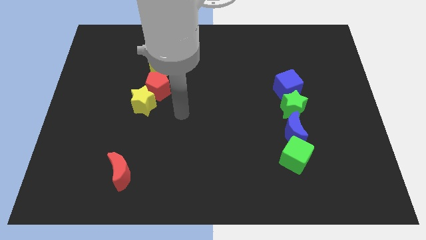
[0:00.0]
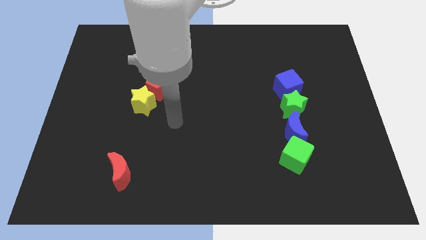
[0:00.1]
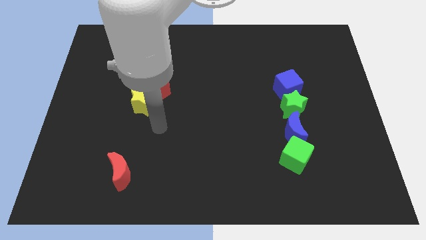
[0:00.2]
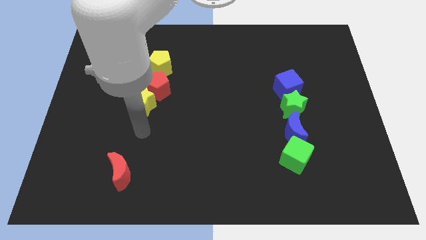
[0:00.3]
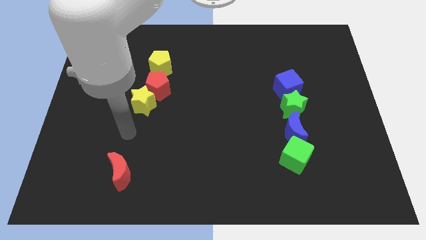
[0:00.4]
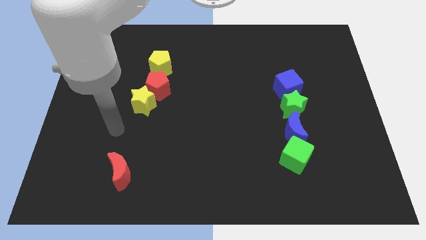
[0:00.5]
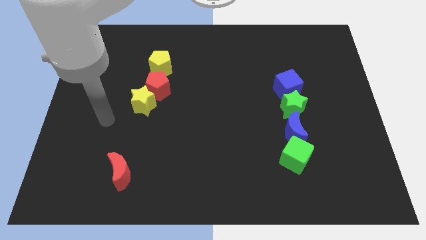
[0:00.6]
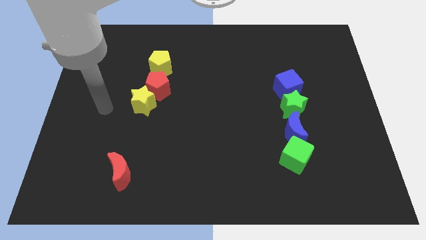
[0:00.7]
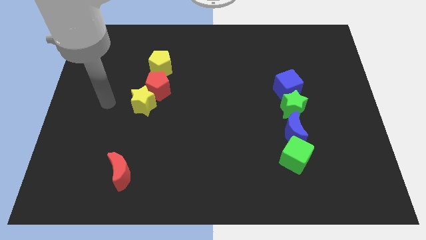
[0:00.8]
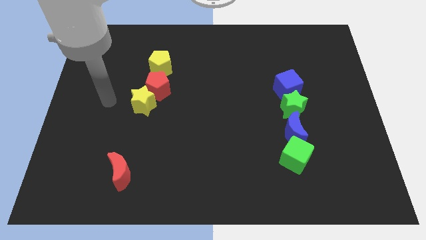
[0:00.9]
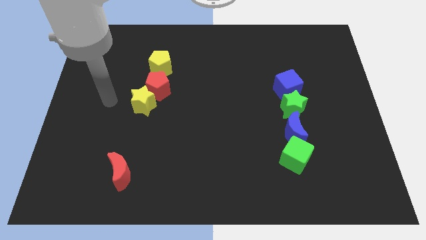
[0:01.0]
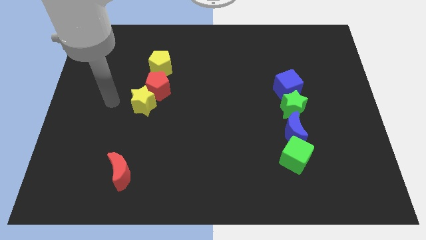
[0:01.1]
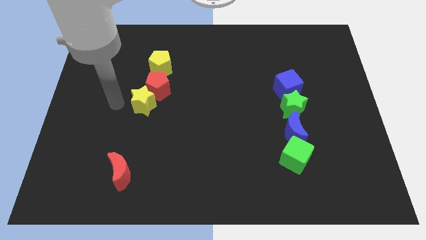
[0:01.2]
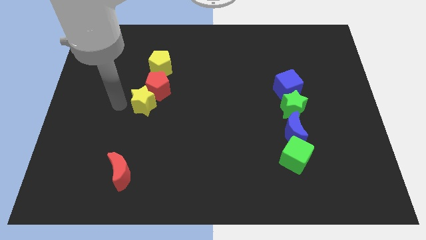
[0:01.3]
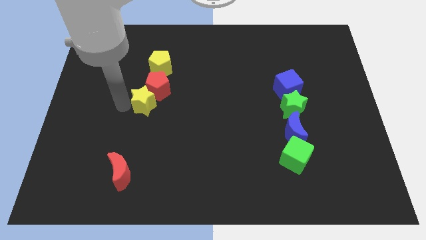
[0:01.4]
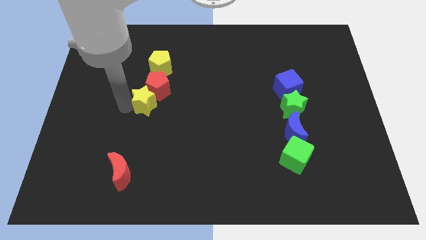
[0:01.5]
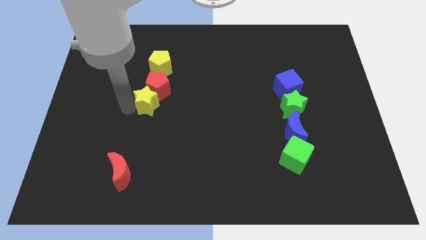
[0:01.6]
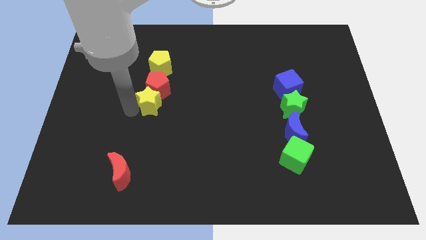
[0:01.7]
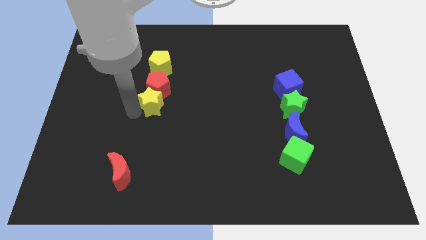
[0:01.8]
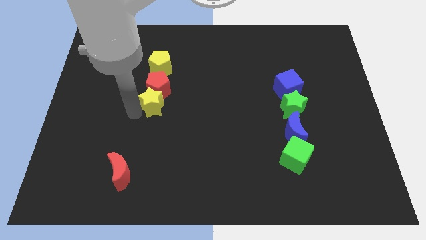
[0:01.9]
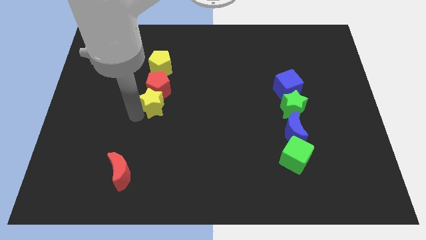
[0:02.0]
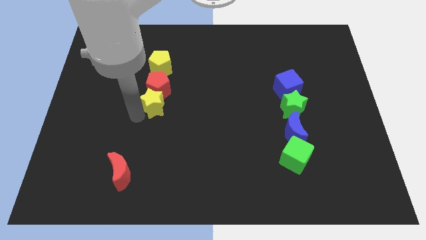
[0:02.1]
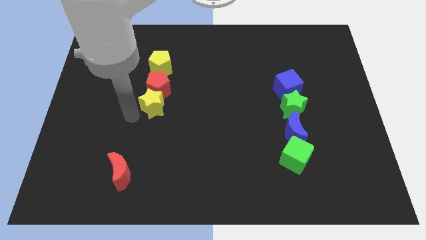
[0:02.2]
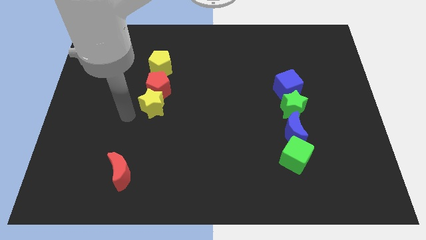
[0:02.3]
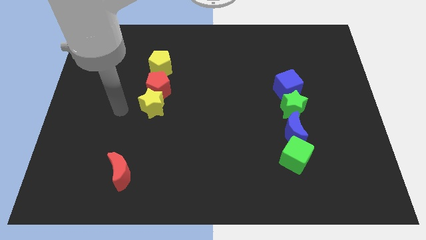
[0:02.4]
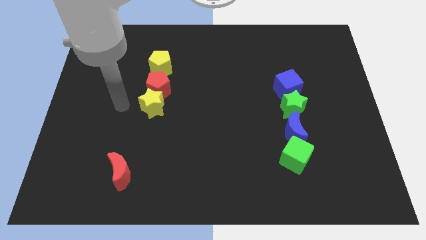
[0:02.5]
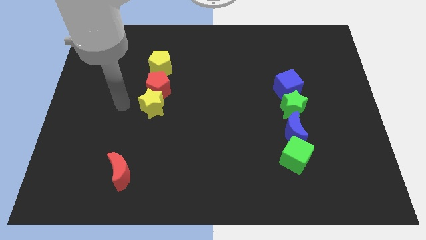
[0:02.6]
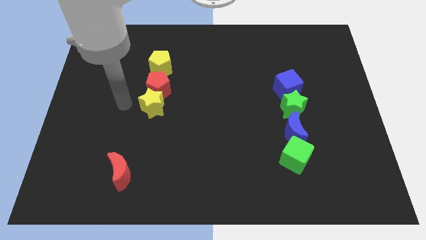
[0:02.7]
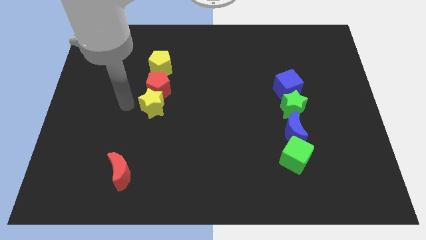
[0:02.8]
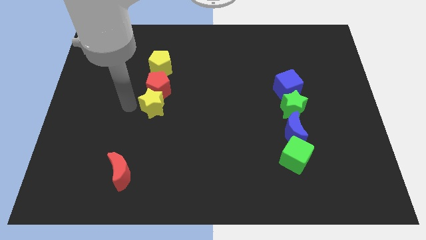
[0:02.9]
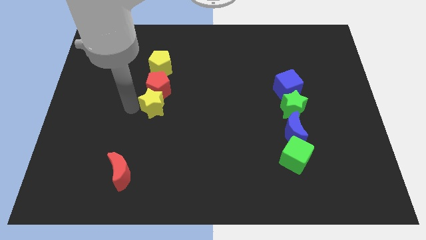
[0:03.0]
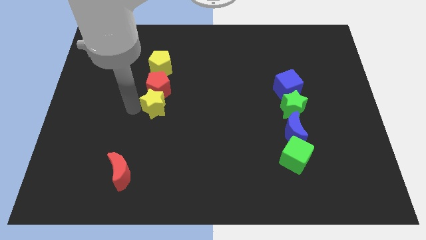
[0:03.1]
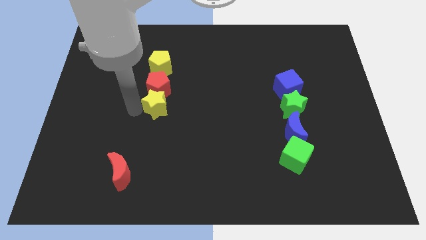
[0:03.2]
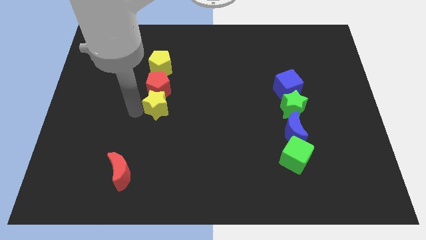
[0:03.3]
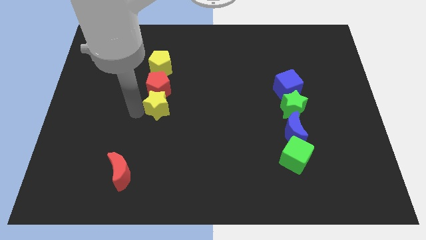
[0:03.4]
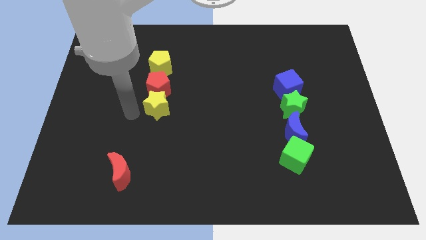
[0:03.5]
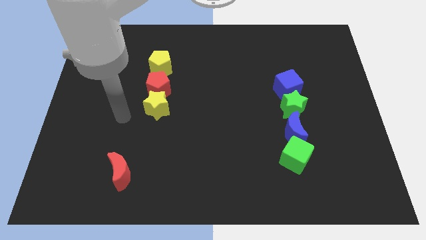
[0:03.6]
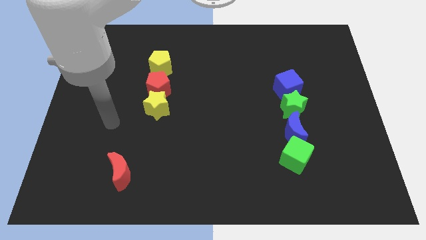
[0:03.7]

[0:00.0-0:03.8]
push yellow star to the bottom of red pentagon

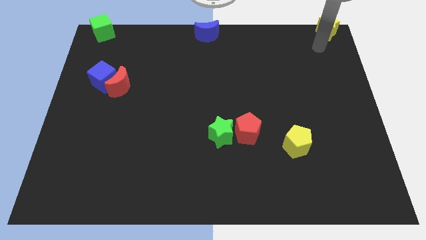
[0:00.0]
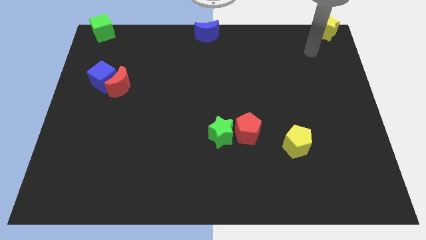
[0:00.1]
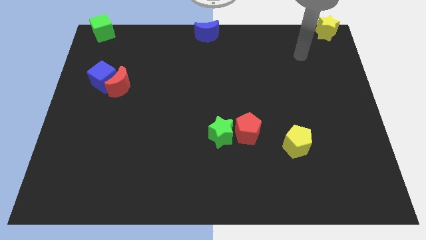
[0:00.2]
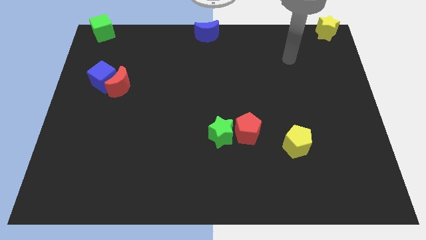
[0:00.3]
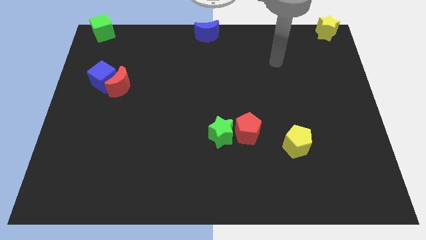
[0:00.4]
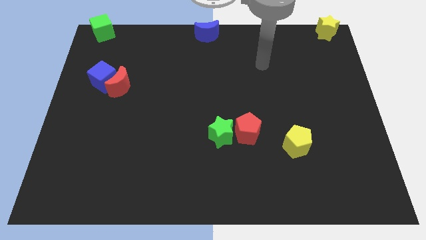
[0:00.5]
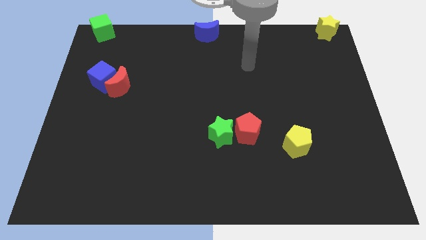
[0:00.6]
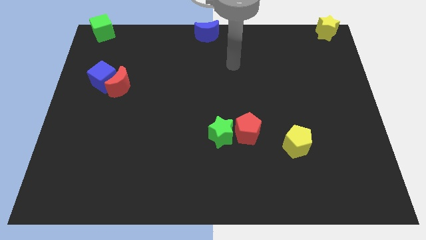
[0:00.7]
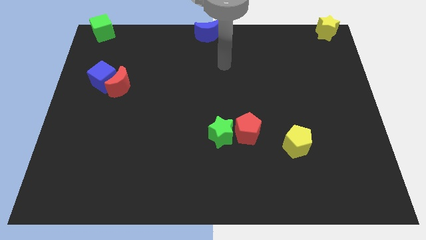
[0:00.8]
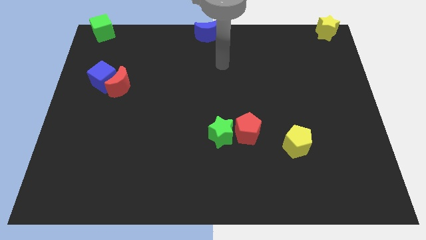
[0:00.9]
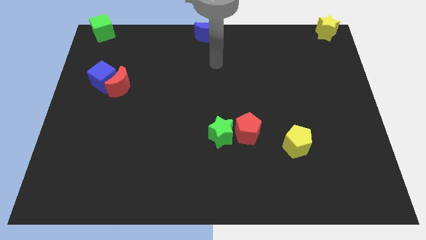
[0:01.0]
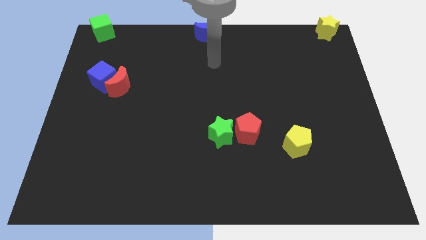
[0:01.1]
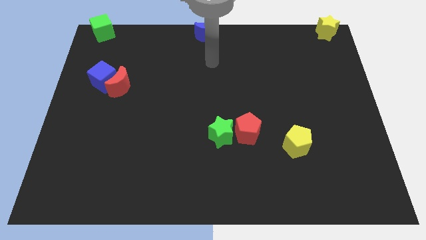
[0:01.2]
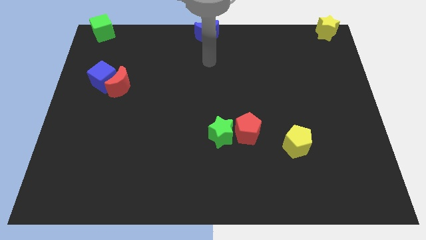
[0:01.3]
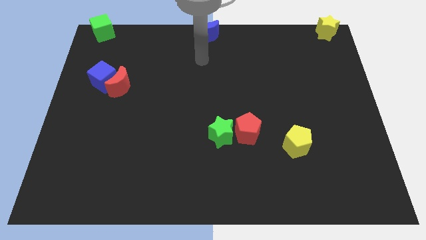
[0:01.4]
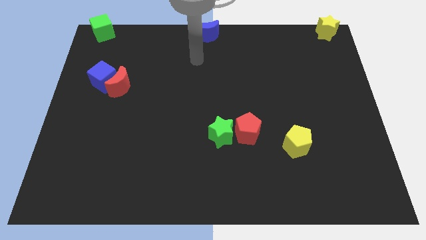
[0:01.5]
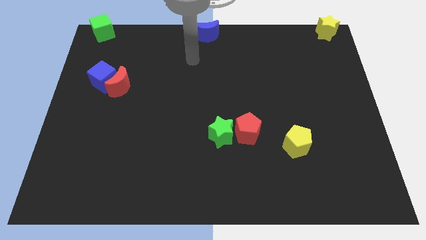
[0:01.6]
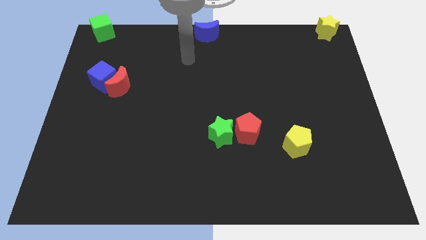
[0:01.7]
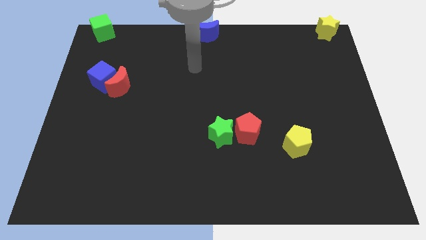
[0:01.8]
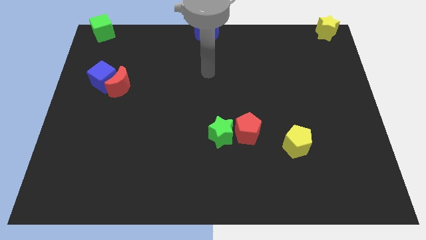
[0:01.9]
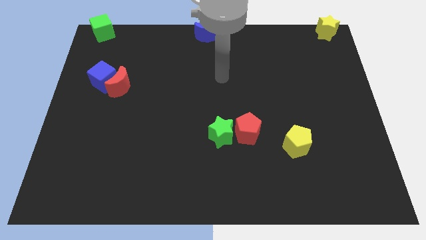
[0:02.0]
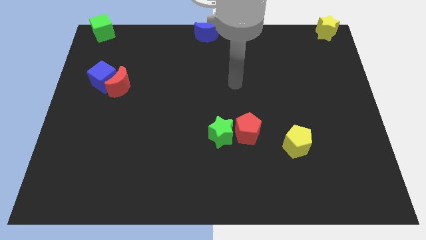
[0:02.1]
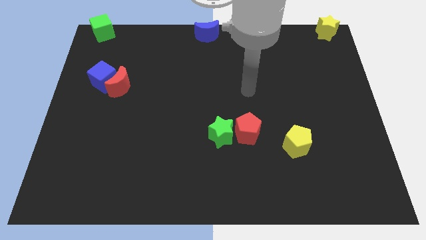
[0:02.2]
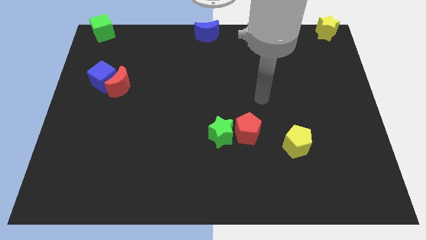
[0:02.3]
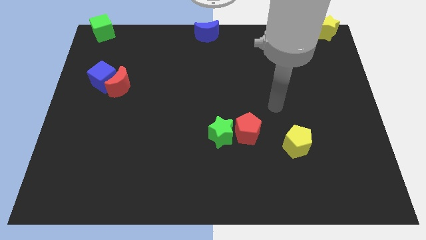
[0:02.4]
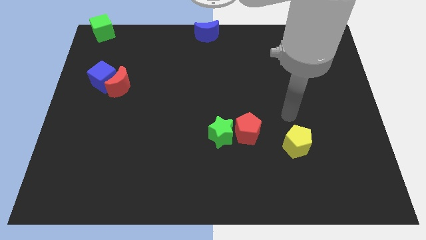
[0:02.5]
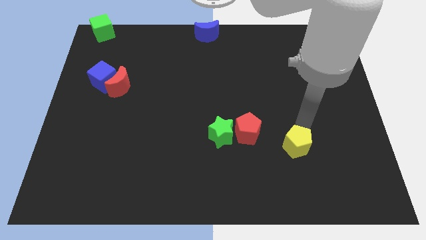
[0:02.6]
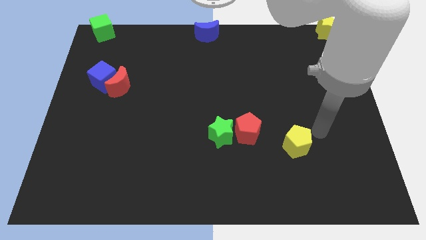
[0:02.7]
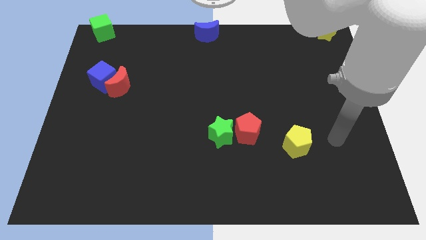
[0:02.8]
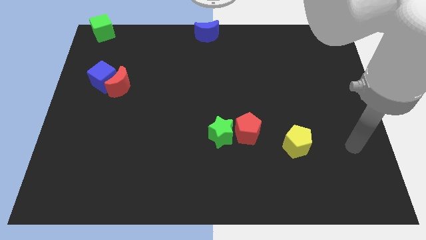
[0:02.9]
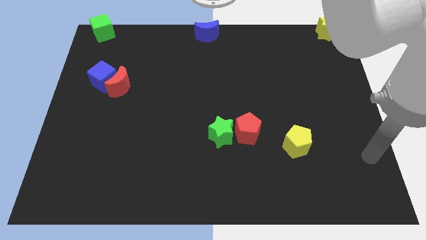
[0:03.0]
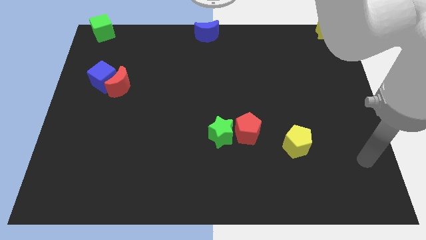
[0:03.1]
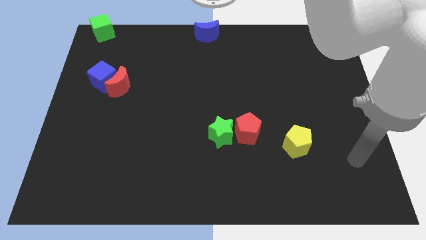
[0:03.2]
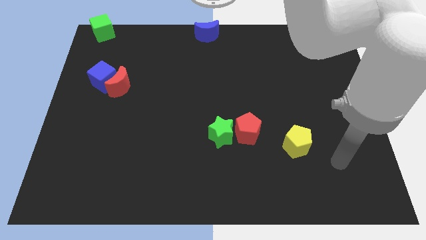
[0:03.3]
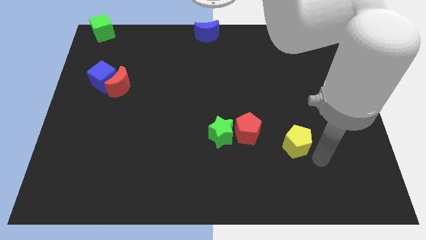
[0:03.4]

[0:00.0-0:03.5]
move your arm to the right side of the yellow pentagon

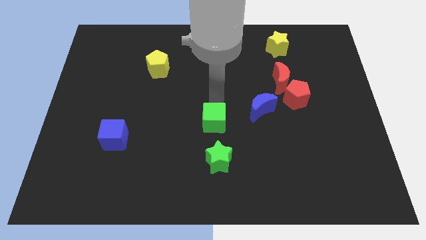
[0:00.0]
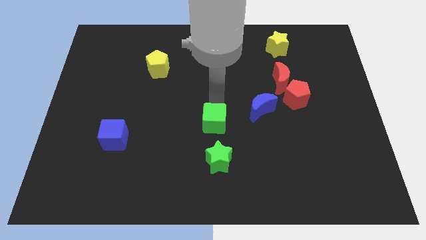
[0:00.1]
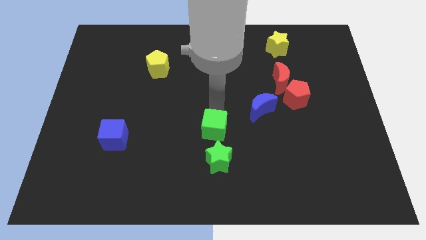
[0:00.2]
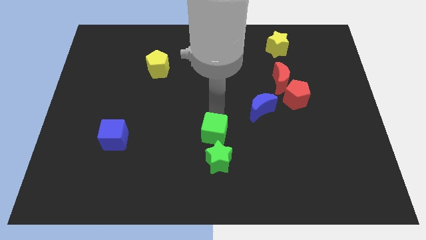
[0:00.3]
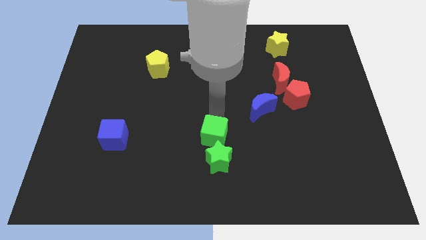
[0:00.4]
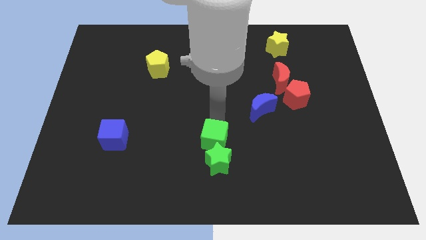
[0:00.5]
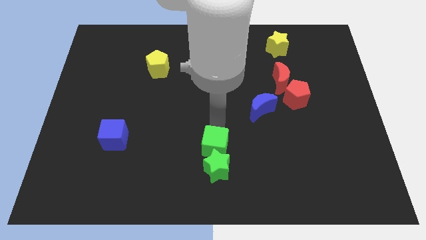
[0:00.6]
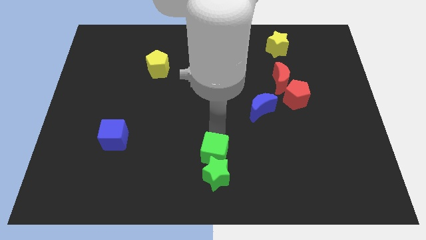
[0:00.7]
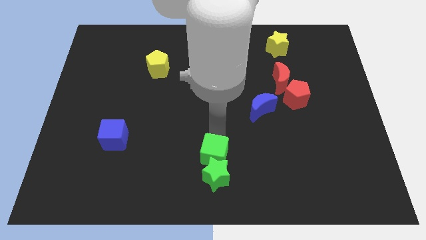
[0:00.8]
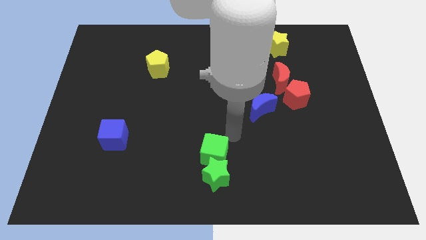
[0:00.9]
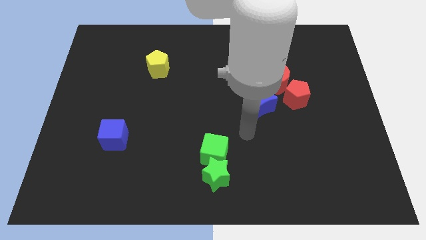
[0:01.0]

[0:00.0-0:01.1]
push the green cube into the green star

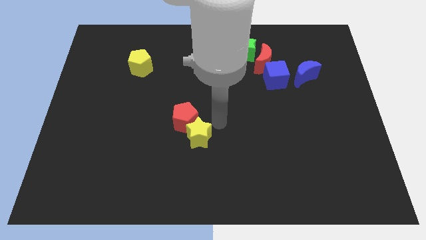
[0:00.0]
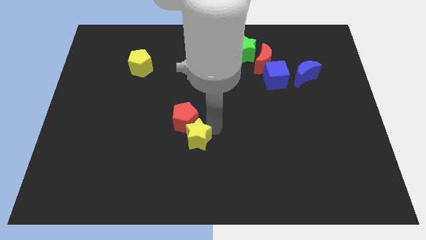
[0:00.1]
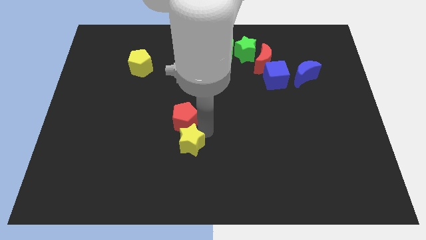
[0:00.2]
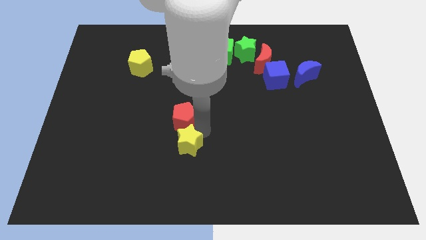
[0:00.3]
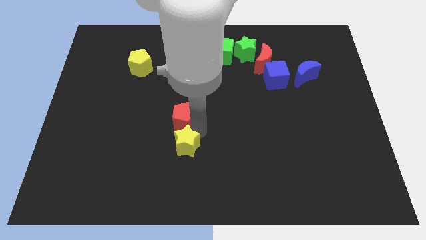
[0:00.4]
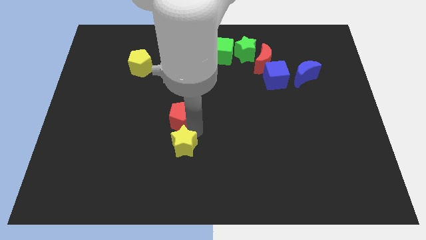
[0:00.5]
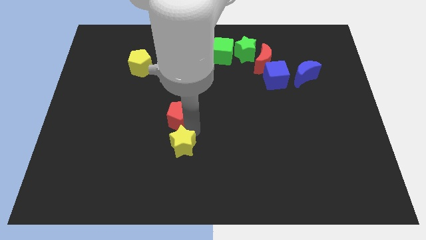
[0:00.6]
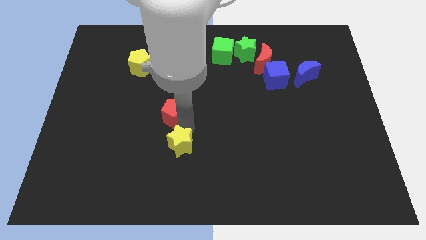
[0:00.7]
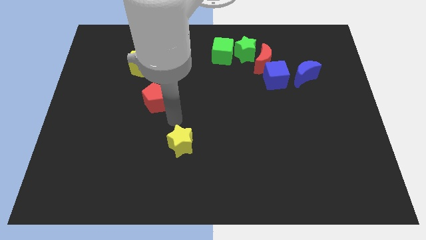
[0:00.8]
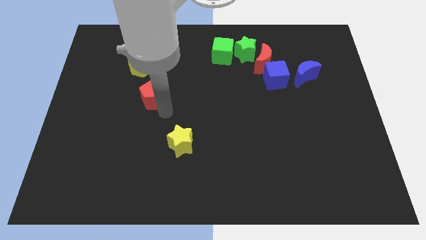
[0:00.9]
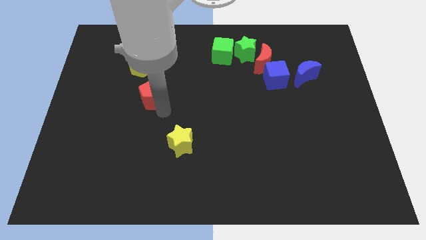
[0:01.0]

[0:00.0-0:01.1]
move the red pentagon between yellow star and yellow pentagon
